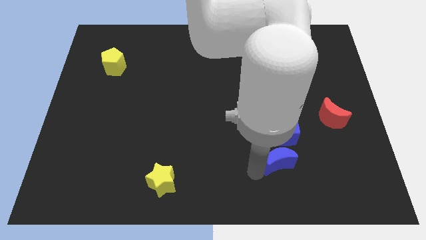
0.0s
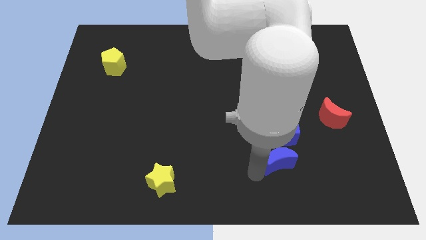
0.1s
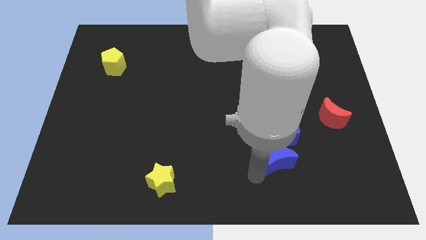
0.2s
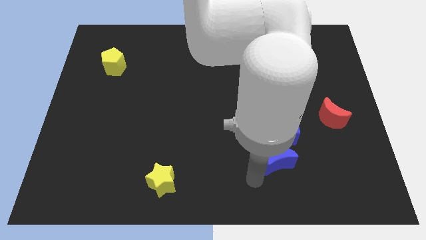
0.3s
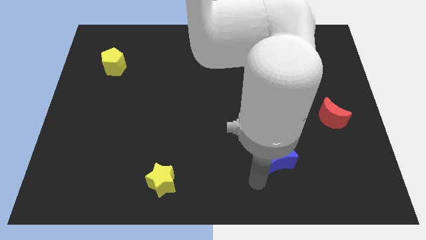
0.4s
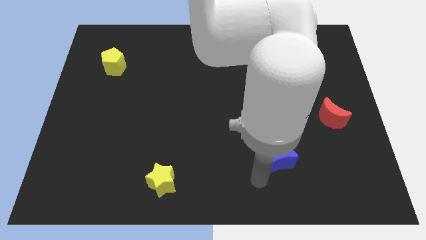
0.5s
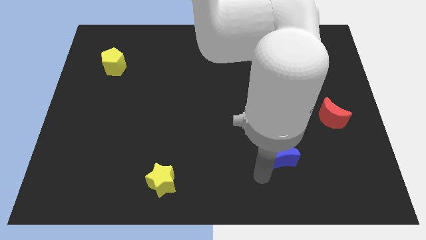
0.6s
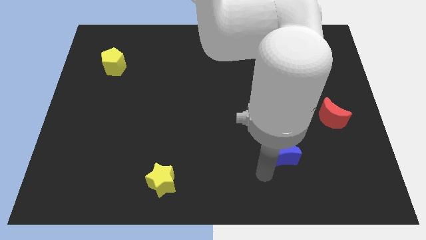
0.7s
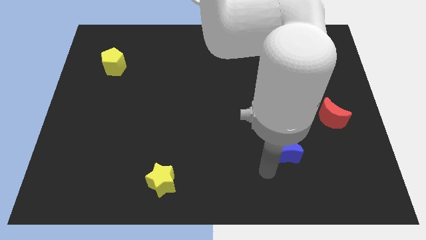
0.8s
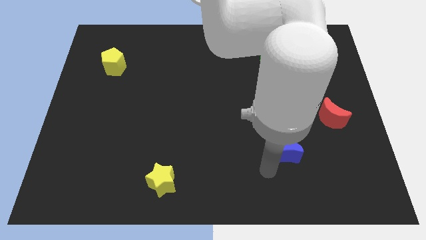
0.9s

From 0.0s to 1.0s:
place the blue moon below the blue cube

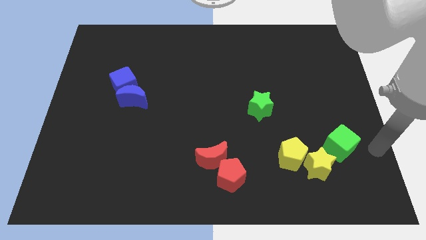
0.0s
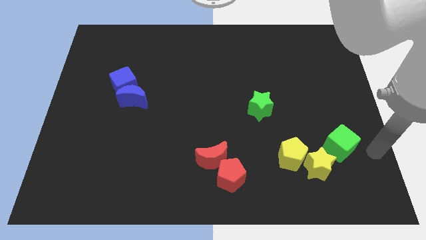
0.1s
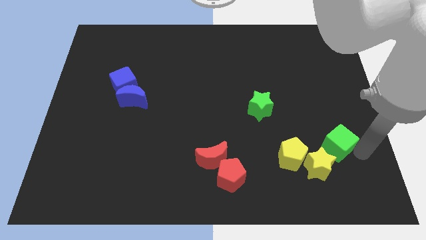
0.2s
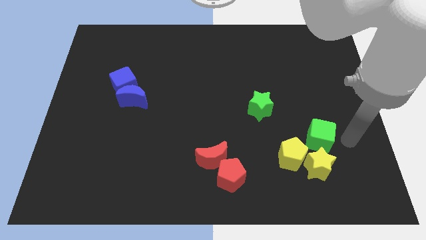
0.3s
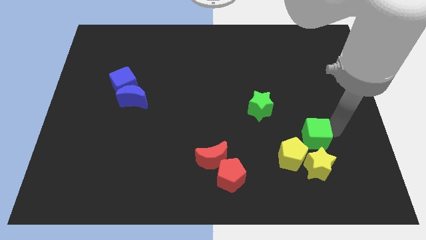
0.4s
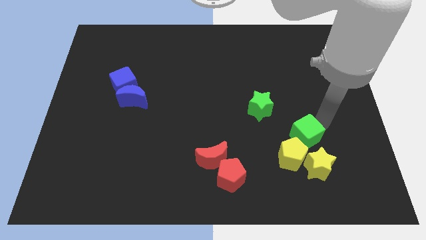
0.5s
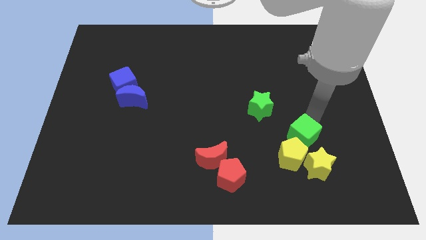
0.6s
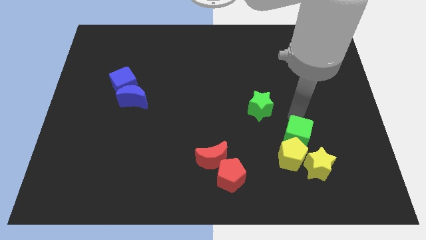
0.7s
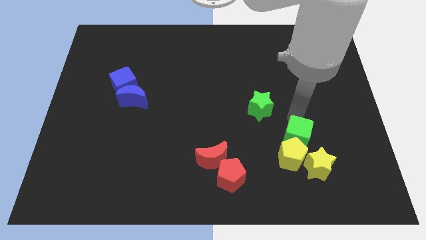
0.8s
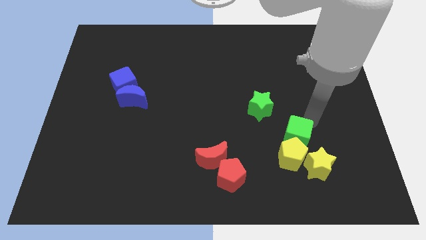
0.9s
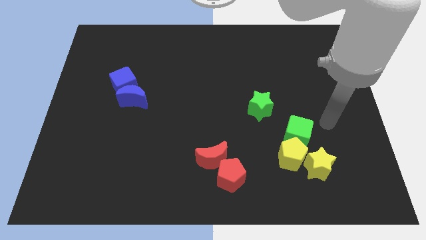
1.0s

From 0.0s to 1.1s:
place green cube to the top of yellow pentagon

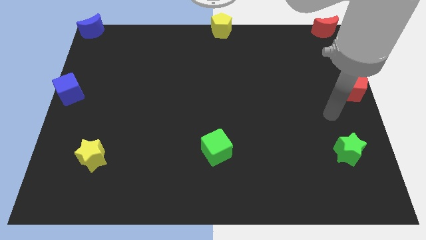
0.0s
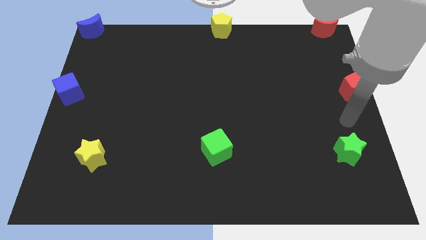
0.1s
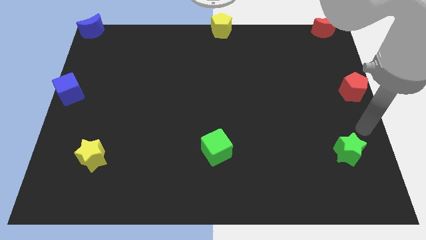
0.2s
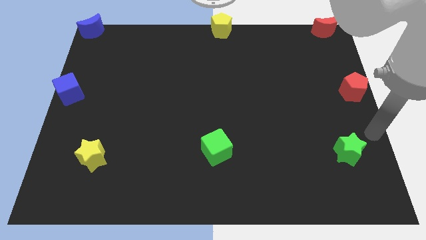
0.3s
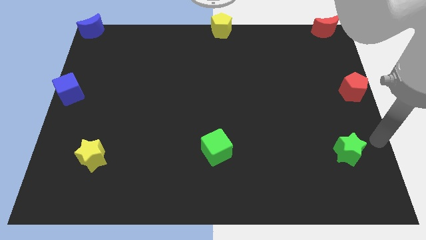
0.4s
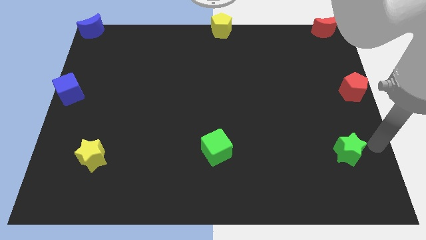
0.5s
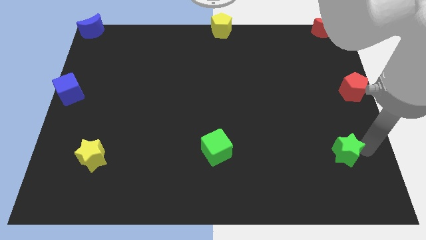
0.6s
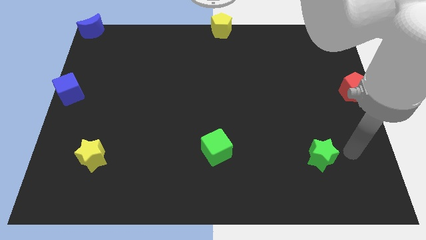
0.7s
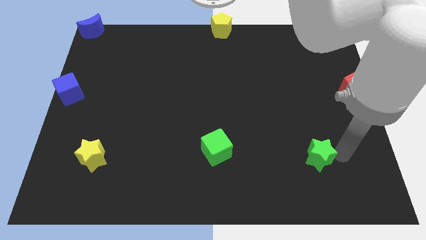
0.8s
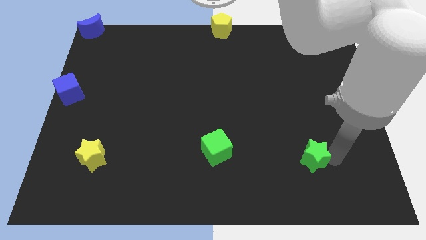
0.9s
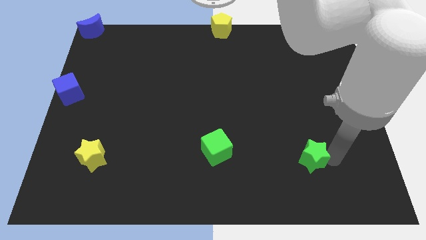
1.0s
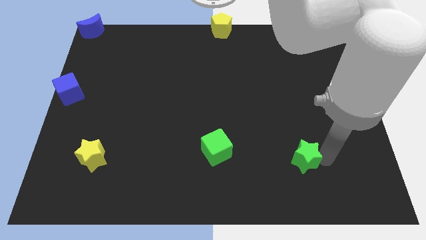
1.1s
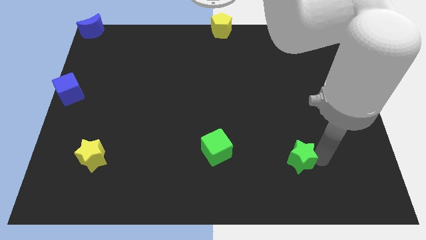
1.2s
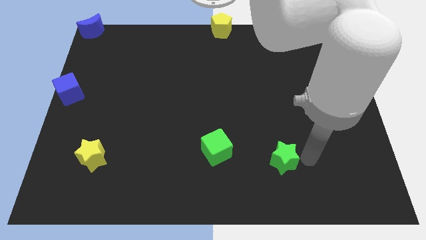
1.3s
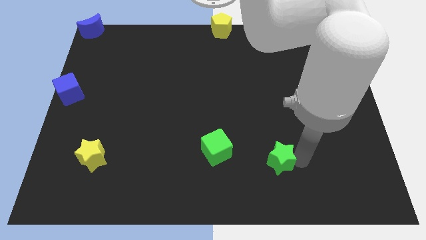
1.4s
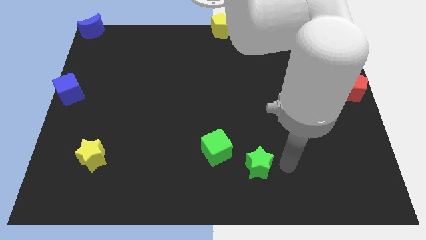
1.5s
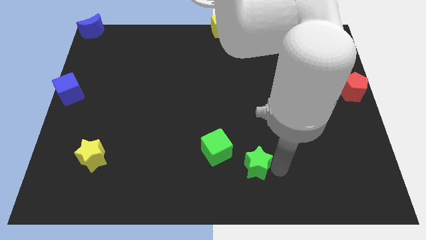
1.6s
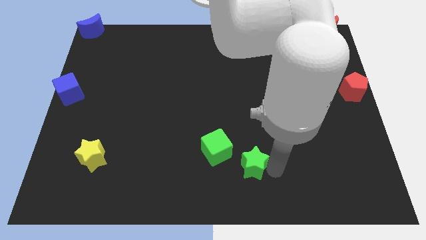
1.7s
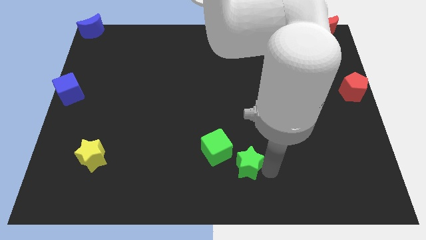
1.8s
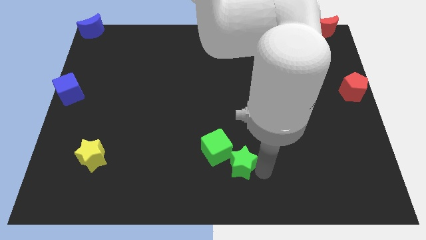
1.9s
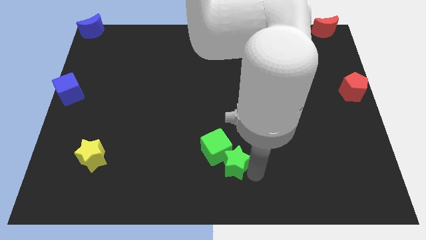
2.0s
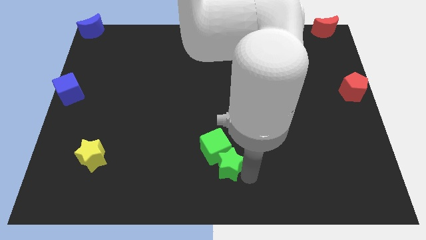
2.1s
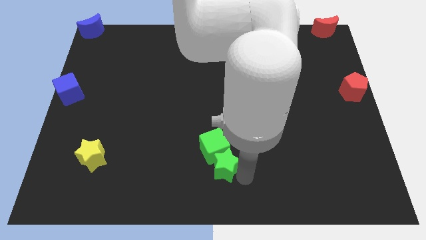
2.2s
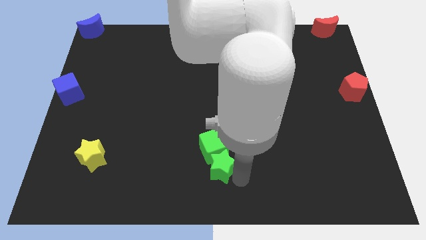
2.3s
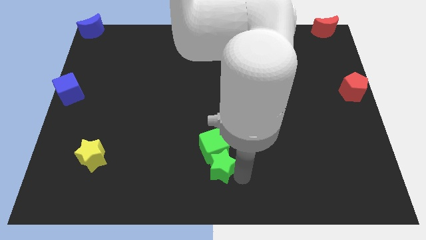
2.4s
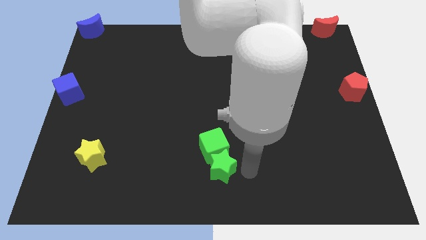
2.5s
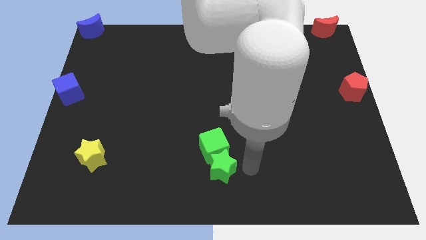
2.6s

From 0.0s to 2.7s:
push green star below green cube

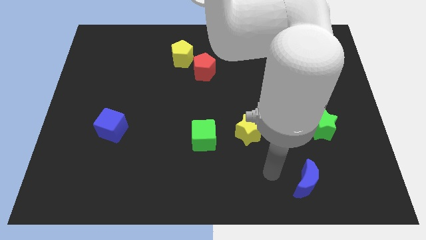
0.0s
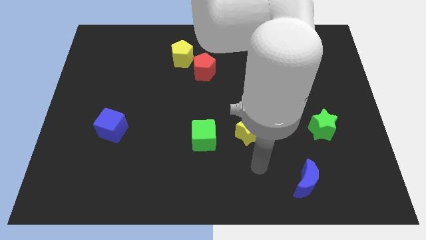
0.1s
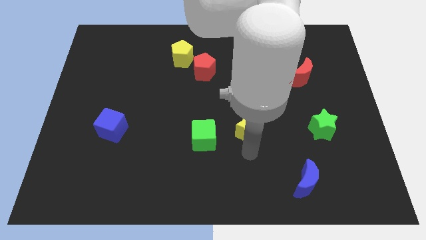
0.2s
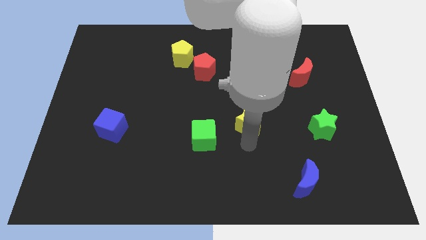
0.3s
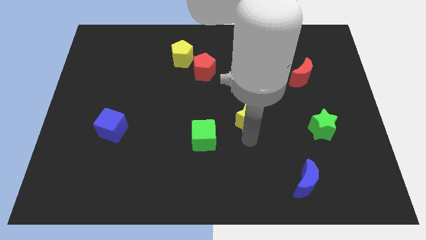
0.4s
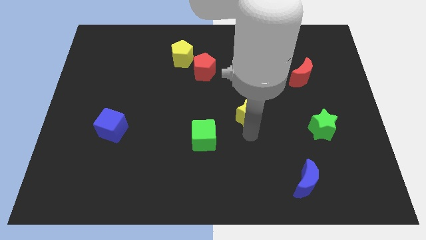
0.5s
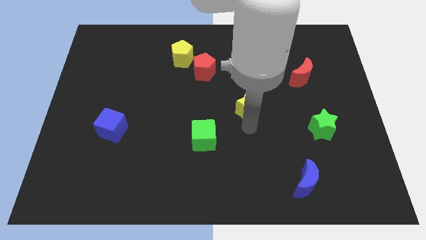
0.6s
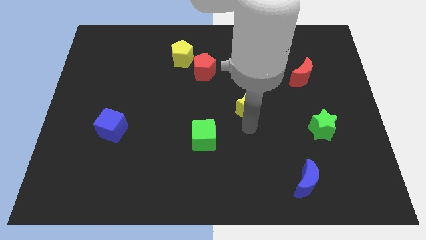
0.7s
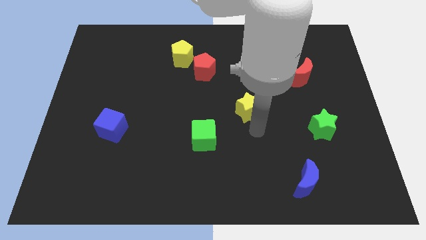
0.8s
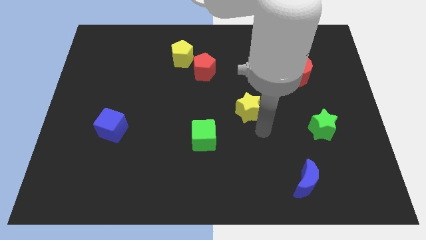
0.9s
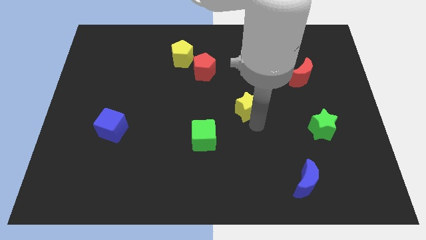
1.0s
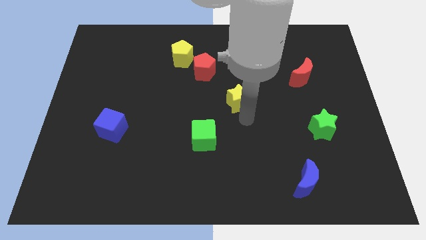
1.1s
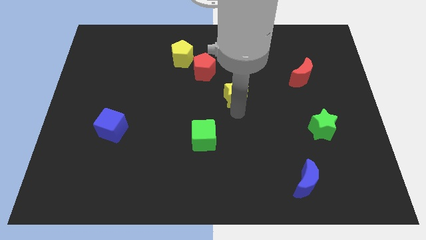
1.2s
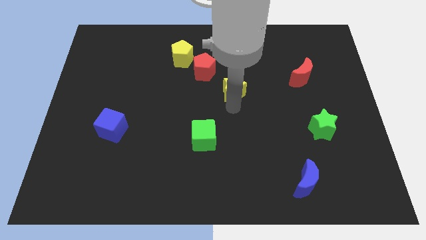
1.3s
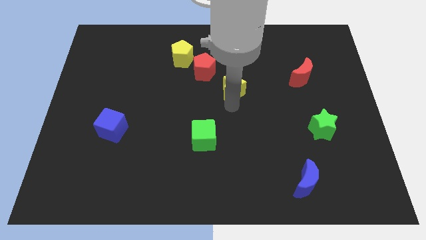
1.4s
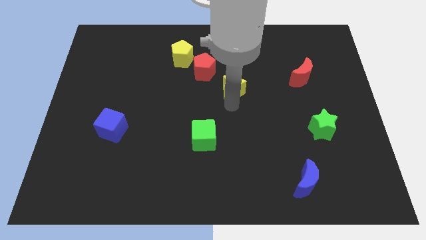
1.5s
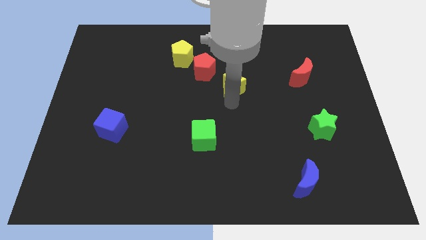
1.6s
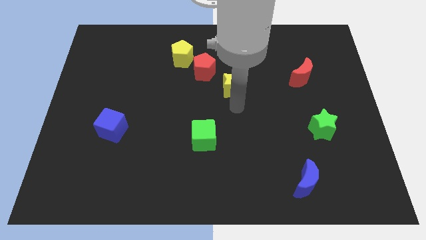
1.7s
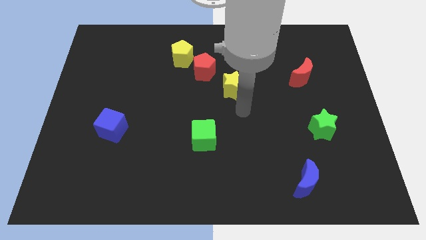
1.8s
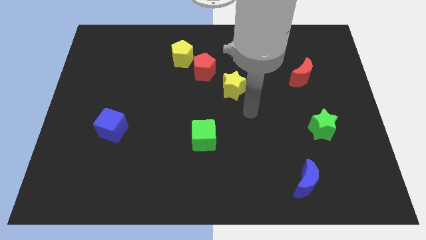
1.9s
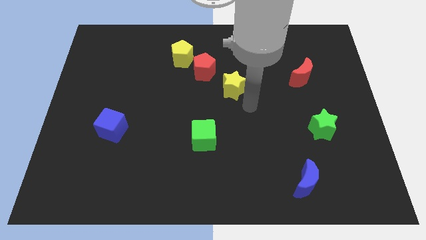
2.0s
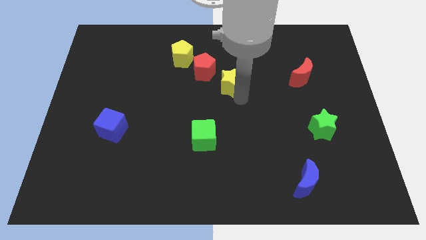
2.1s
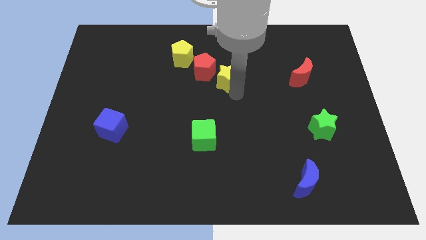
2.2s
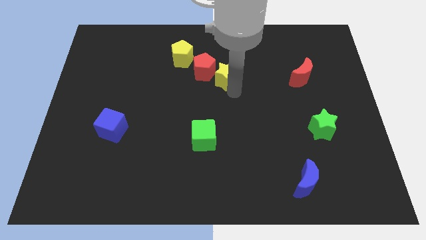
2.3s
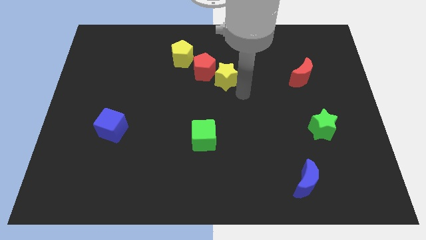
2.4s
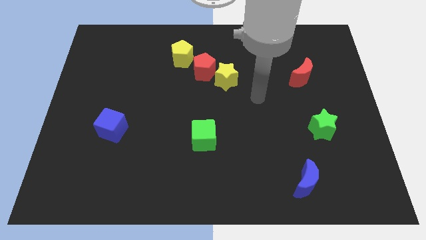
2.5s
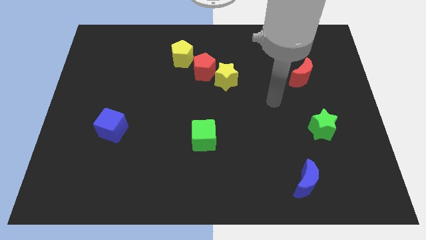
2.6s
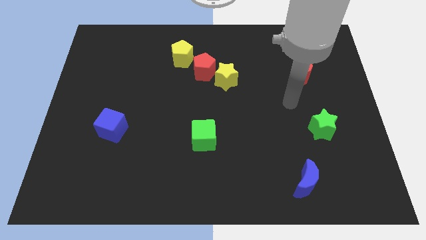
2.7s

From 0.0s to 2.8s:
push yellow star towards red pentagon

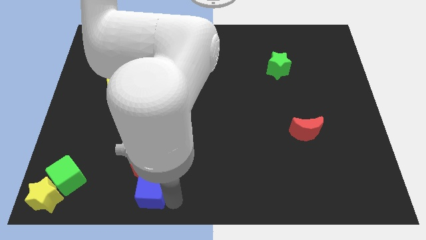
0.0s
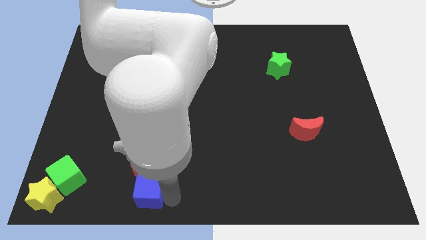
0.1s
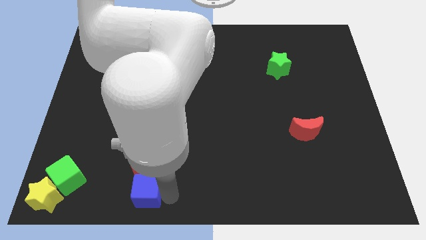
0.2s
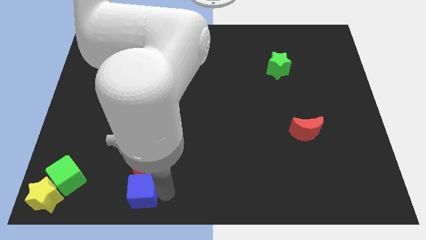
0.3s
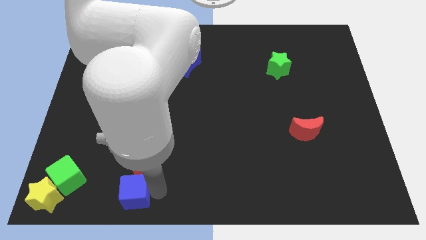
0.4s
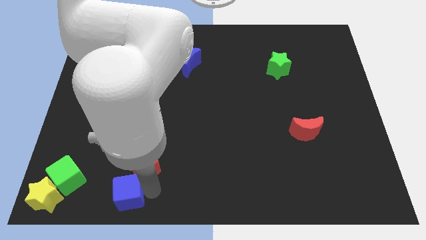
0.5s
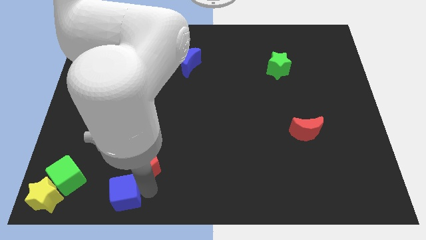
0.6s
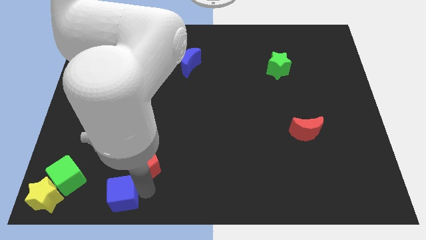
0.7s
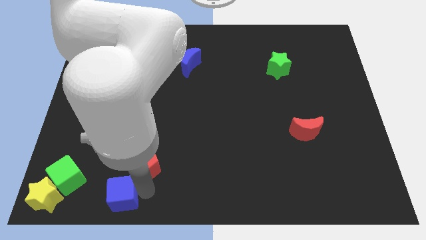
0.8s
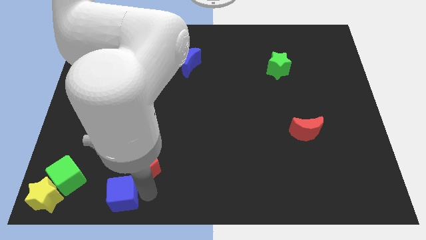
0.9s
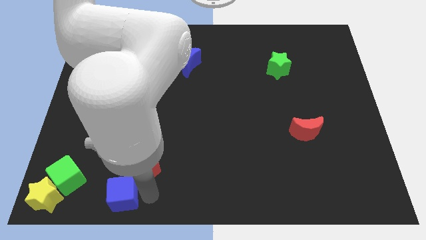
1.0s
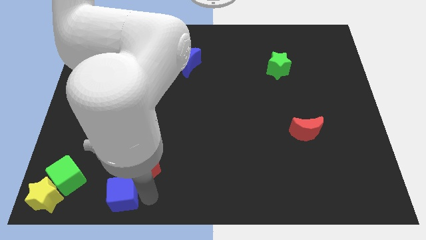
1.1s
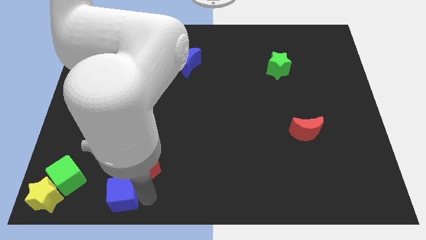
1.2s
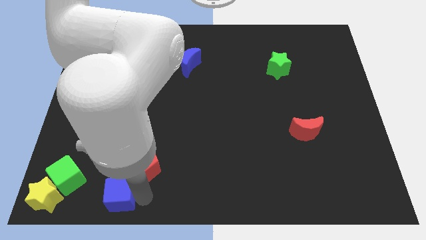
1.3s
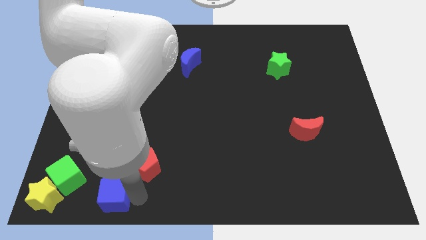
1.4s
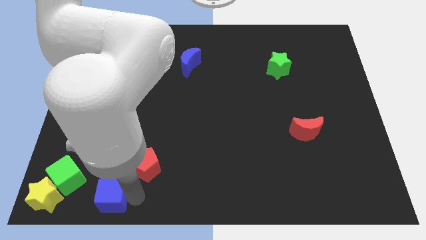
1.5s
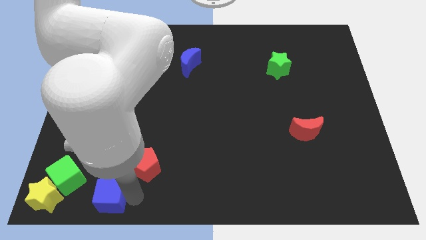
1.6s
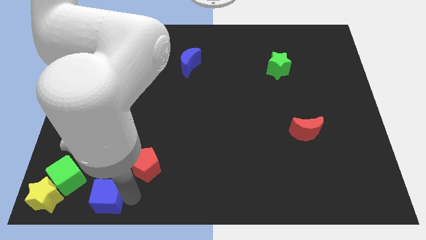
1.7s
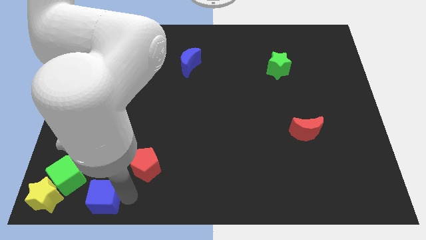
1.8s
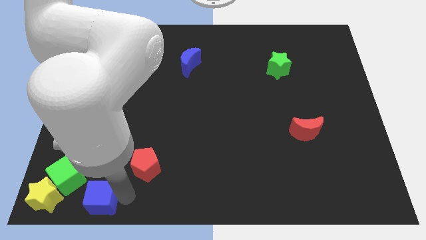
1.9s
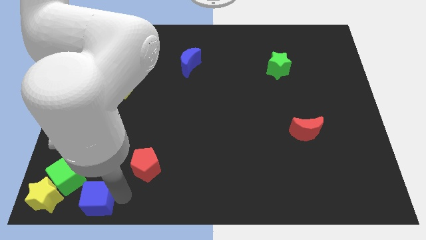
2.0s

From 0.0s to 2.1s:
move the blue cube parallel to the yellow star
